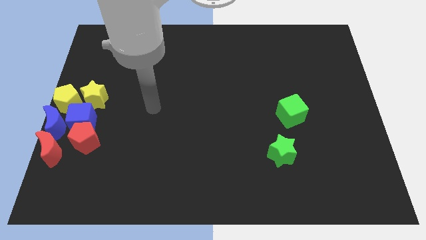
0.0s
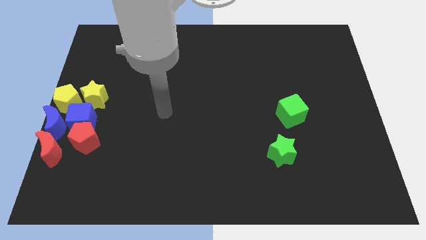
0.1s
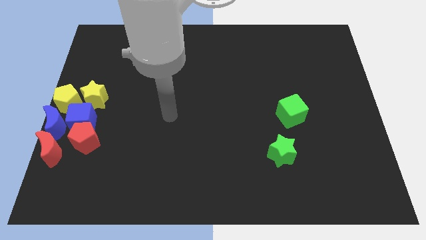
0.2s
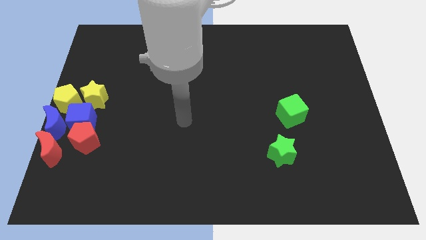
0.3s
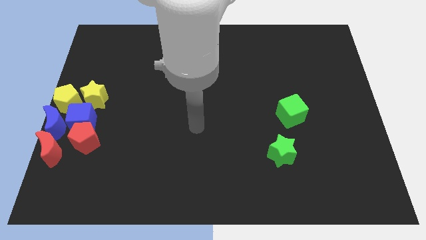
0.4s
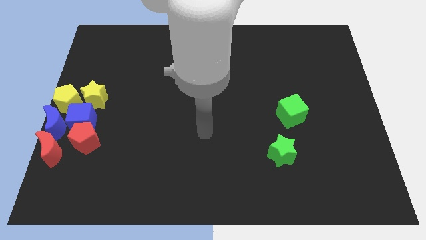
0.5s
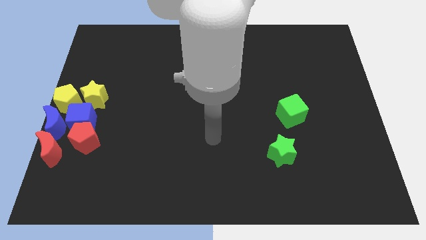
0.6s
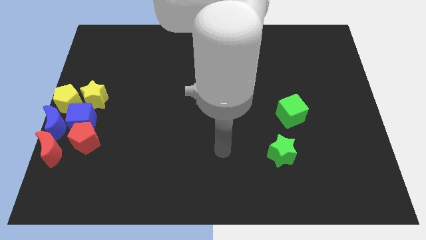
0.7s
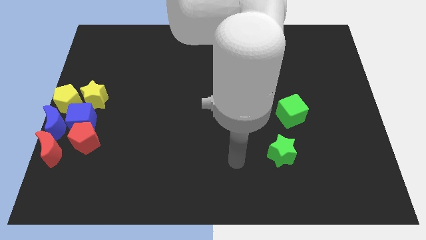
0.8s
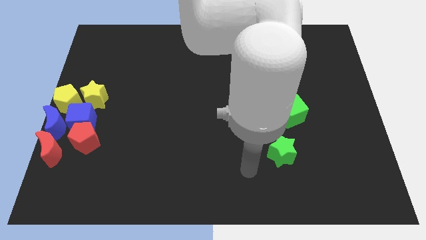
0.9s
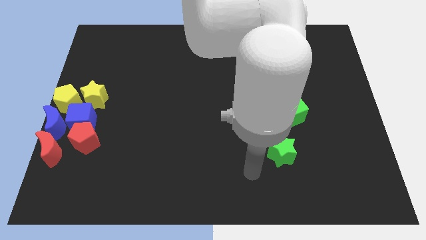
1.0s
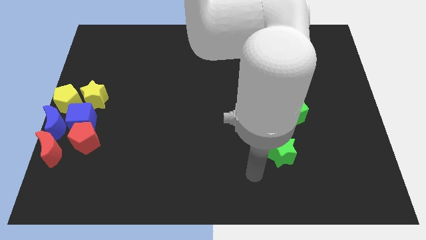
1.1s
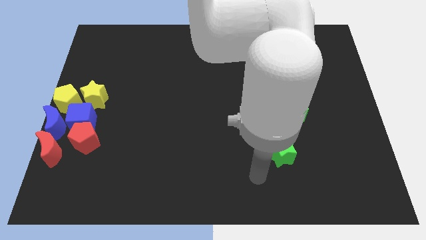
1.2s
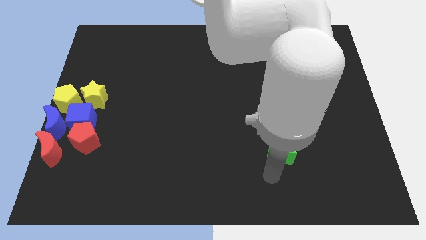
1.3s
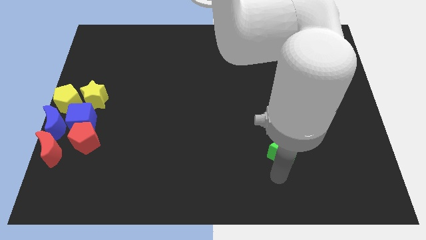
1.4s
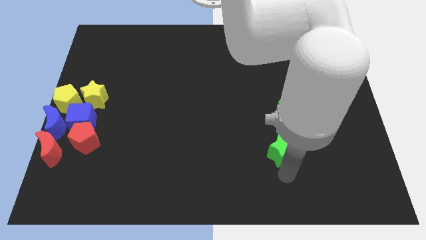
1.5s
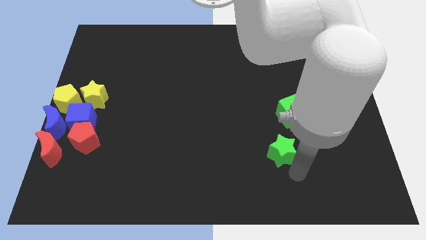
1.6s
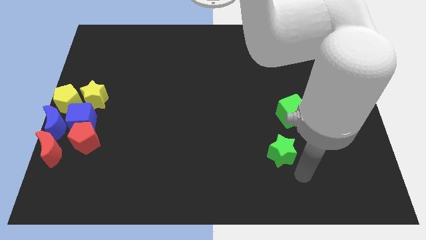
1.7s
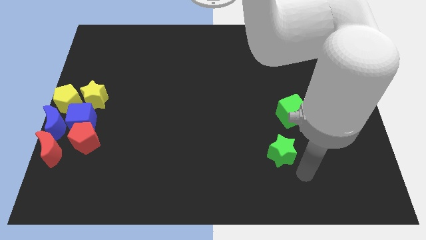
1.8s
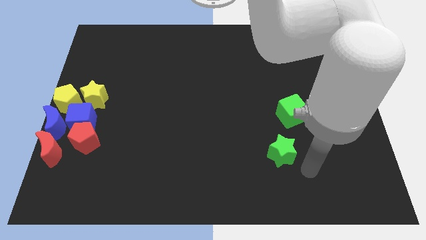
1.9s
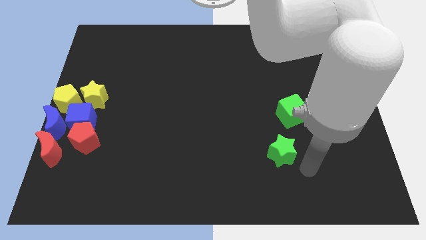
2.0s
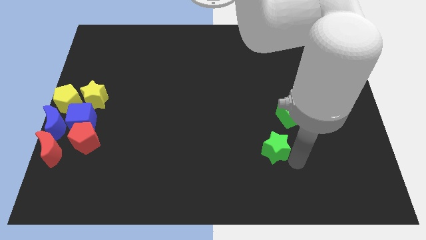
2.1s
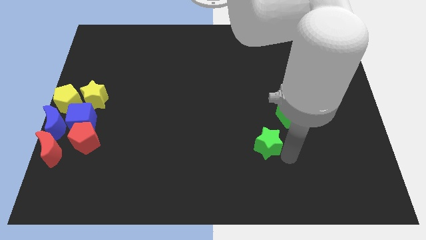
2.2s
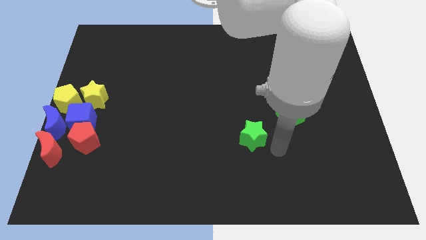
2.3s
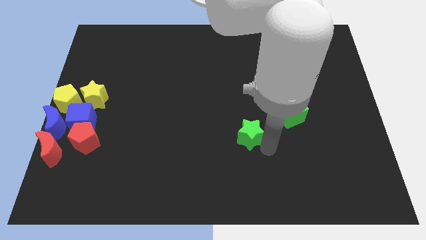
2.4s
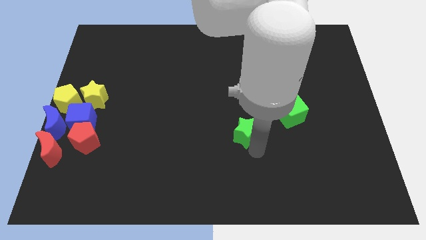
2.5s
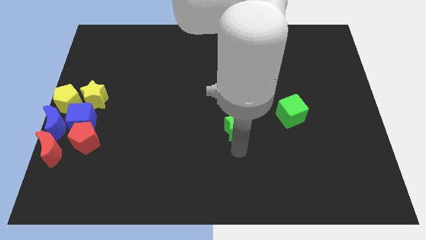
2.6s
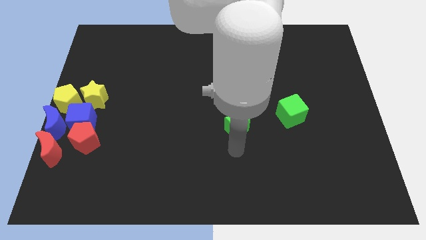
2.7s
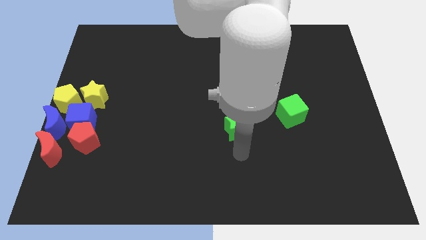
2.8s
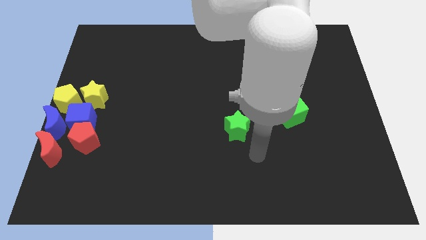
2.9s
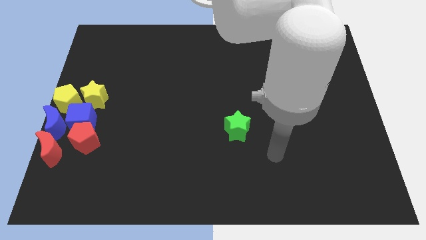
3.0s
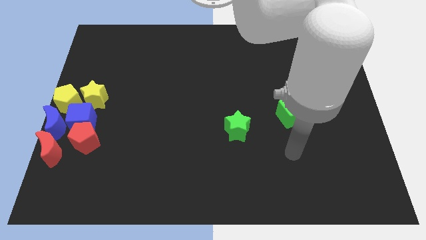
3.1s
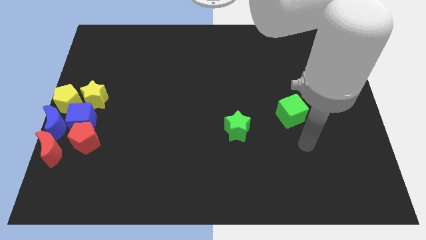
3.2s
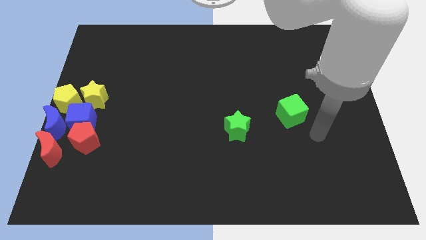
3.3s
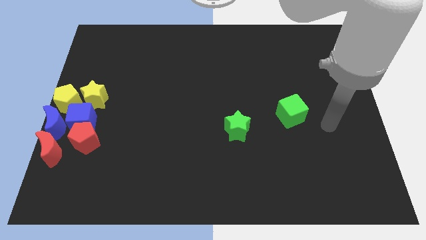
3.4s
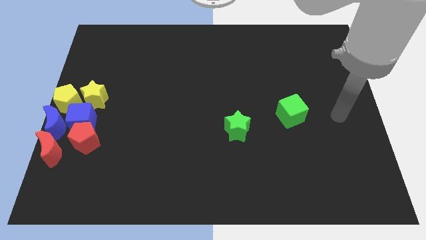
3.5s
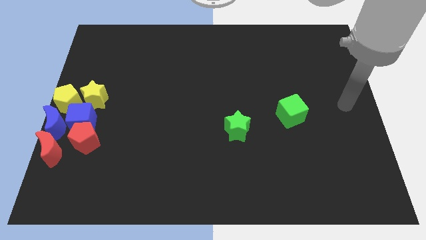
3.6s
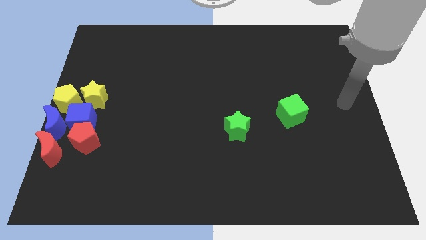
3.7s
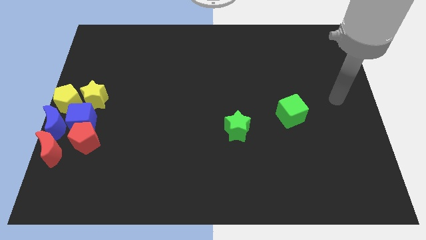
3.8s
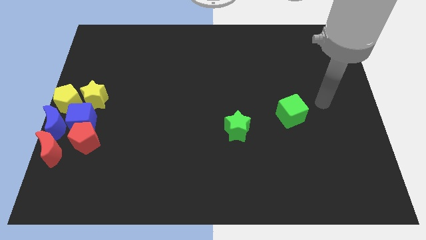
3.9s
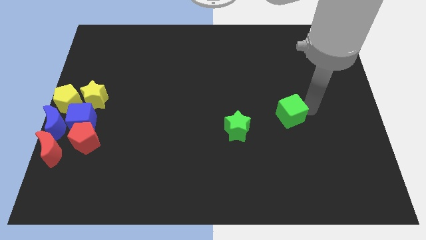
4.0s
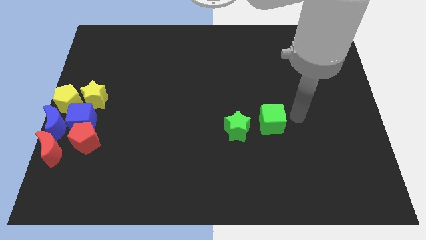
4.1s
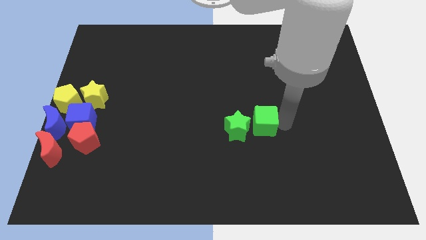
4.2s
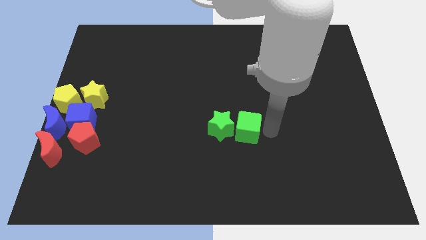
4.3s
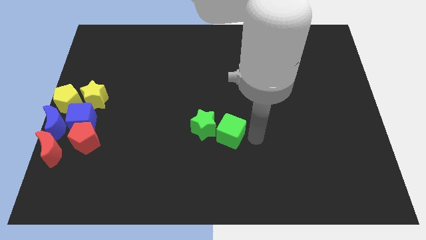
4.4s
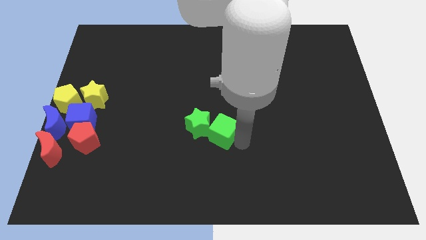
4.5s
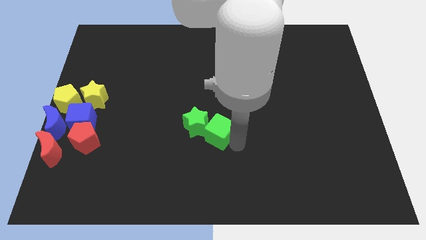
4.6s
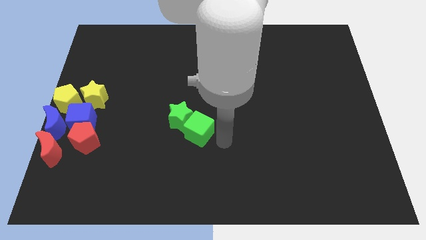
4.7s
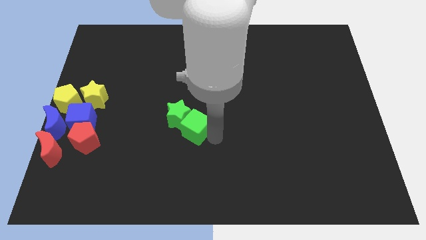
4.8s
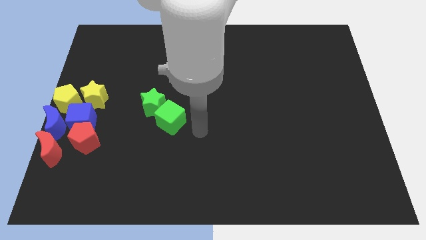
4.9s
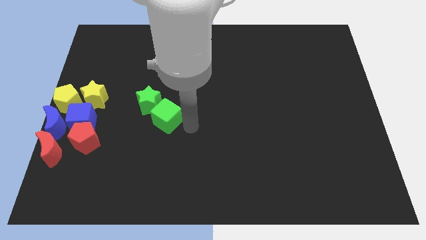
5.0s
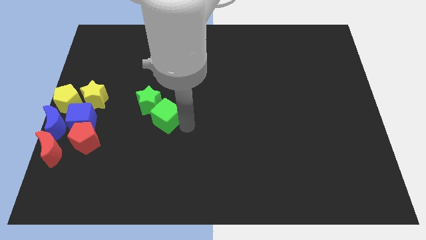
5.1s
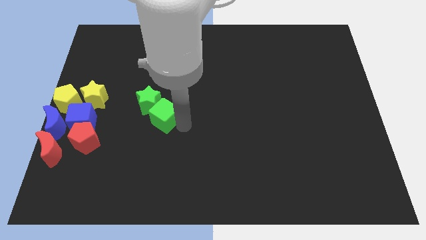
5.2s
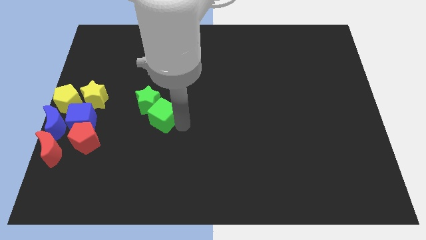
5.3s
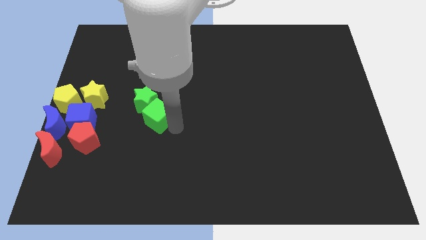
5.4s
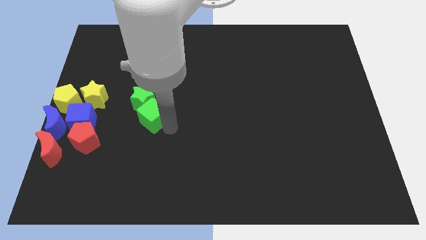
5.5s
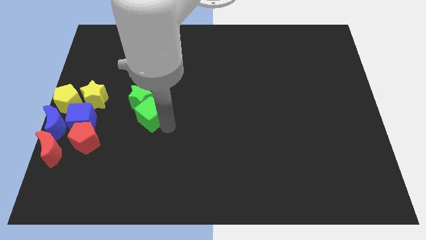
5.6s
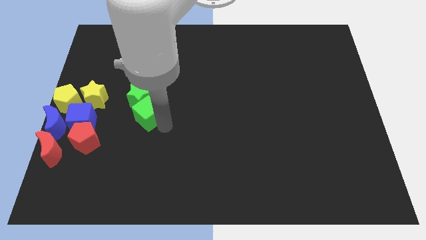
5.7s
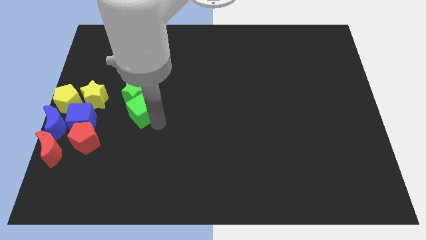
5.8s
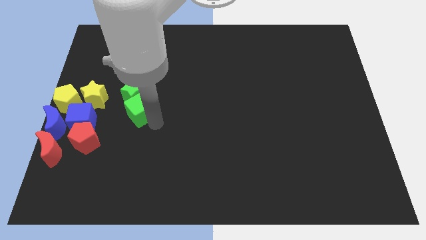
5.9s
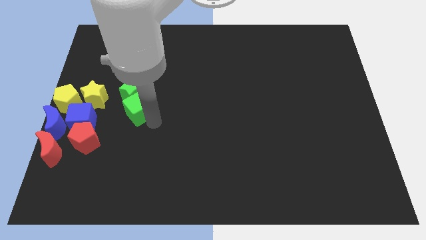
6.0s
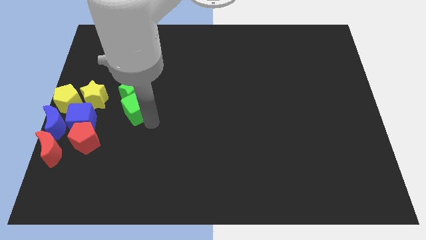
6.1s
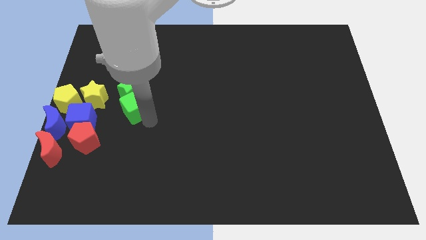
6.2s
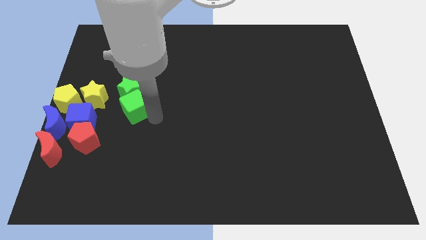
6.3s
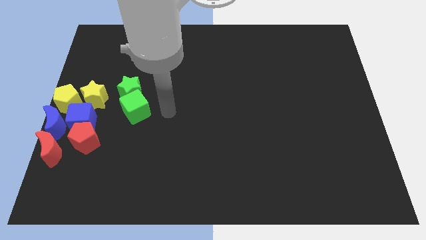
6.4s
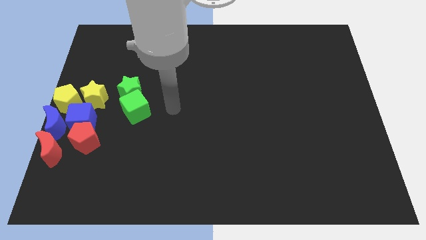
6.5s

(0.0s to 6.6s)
push the both green star and green cube towards the left center of the board

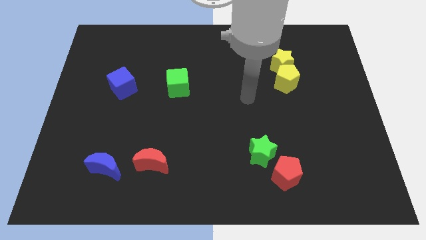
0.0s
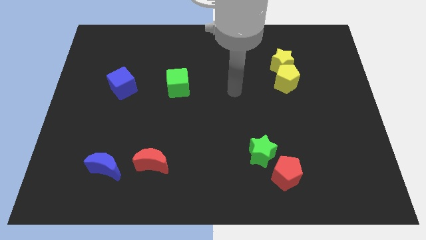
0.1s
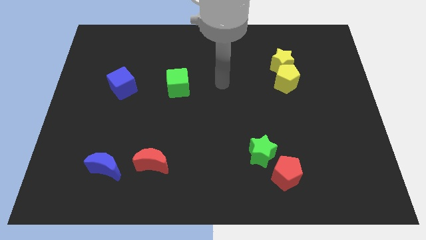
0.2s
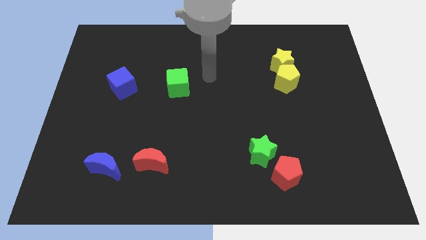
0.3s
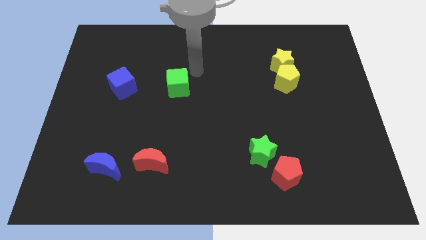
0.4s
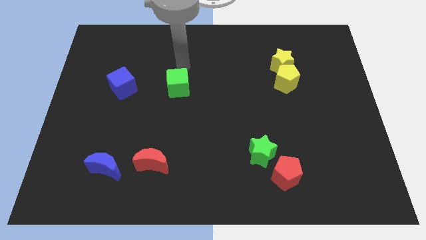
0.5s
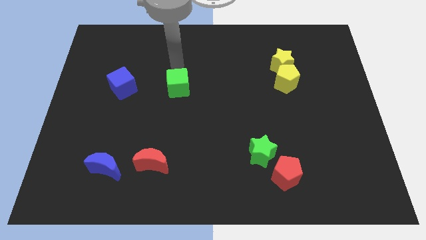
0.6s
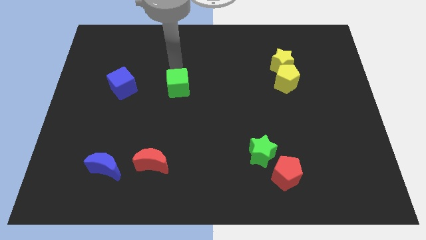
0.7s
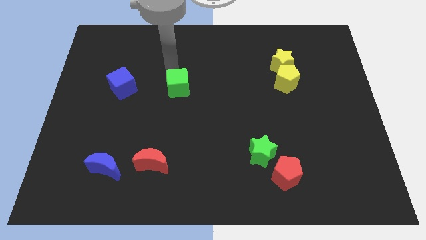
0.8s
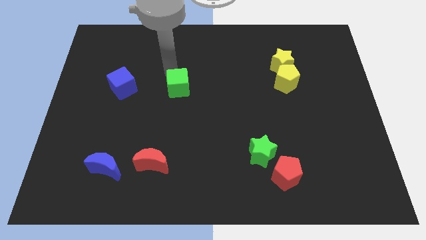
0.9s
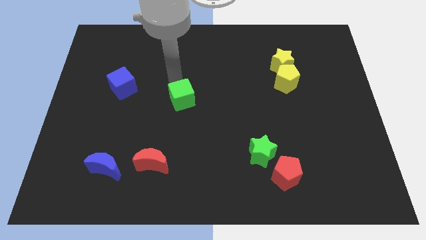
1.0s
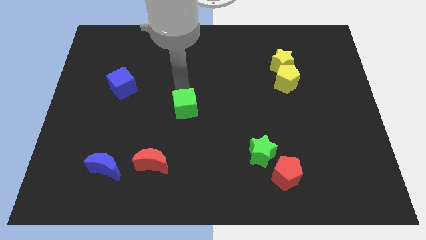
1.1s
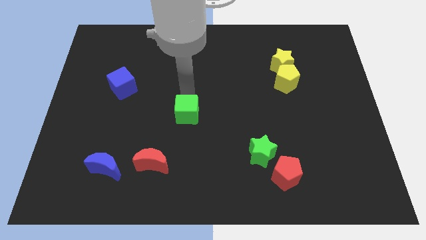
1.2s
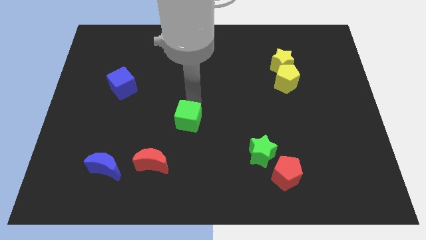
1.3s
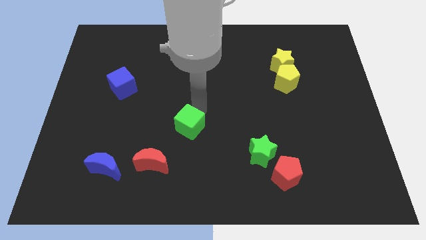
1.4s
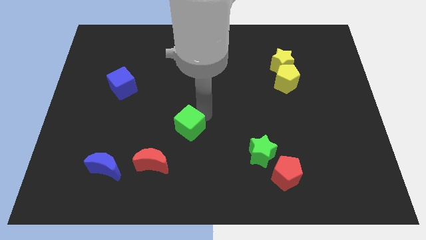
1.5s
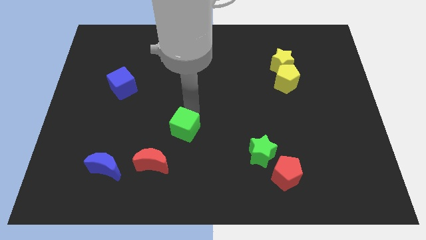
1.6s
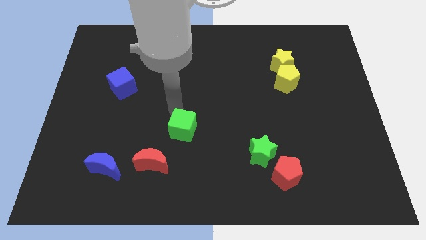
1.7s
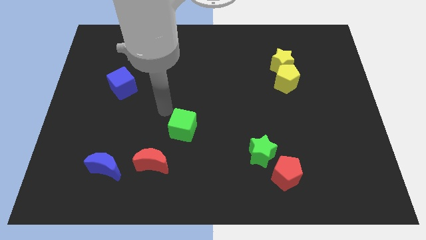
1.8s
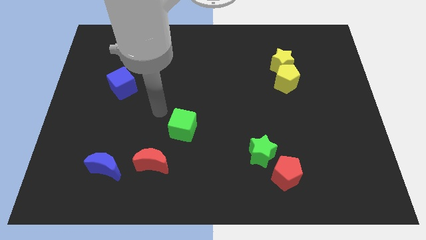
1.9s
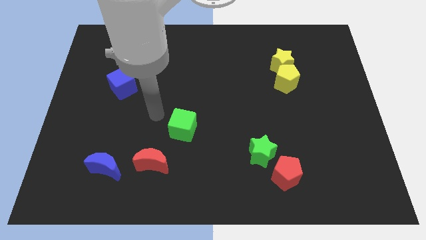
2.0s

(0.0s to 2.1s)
slide green cube to top right of red moon

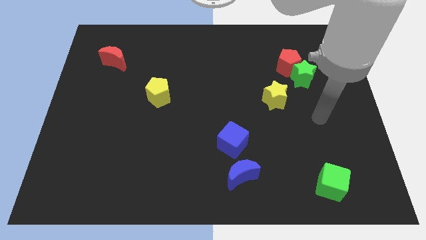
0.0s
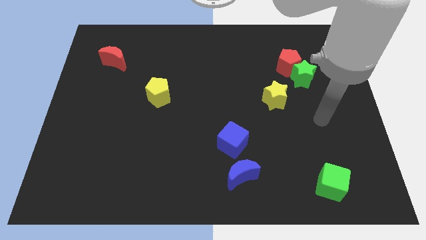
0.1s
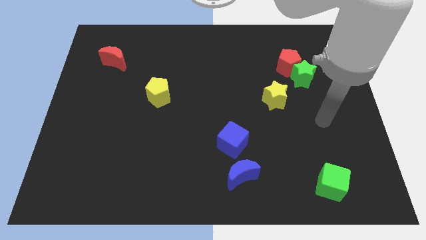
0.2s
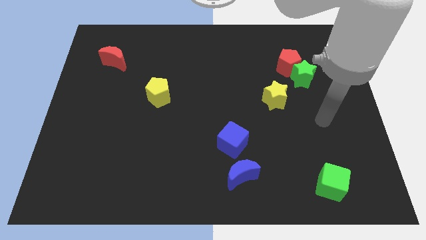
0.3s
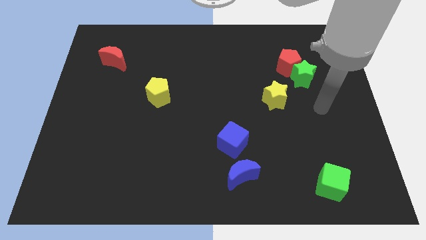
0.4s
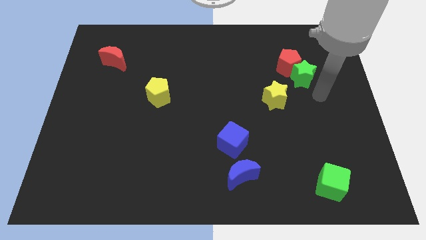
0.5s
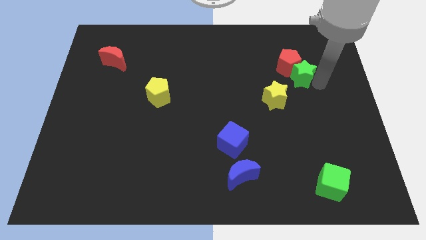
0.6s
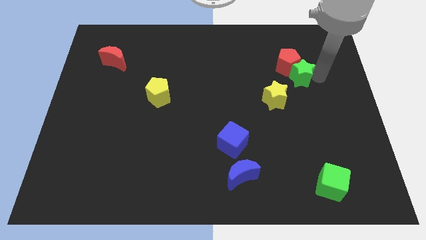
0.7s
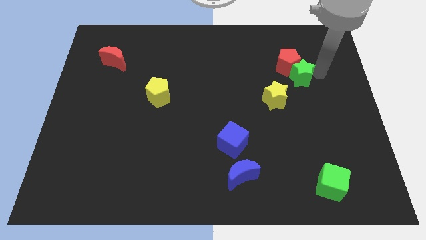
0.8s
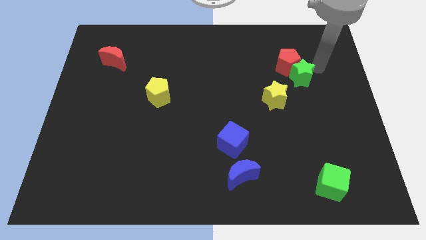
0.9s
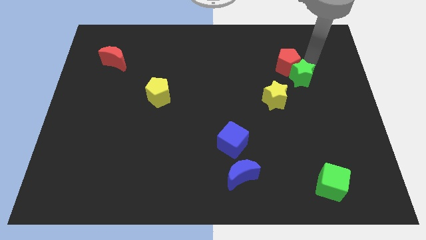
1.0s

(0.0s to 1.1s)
move your arm towards the green star
